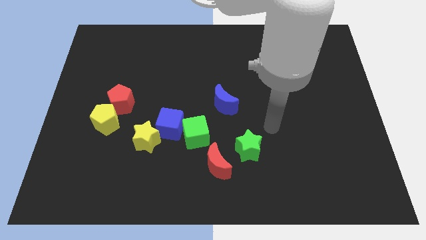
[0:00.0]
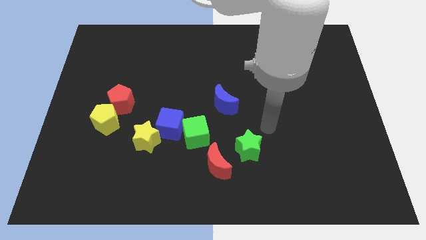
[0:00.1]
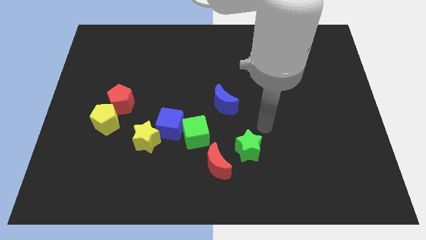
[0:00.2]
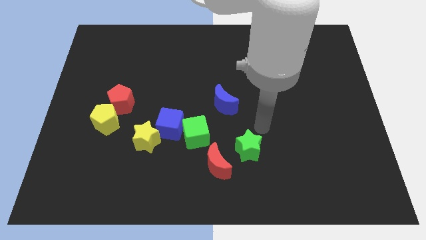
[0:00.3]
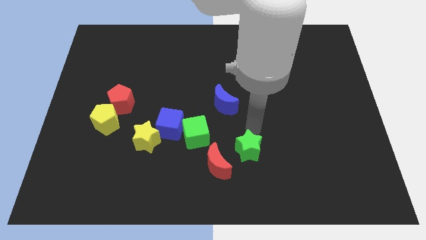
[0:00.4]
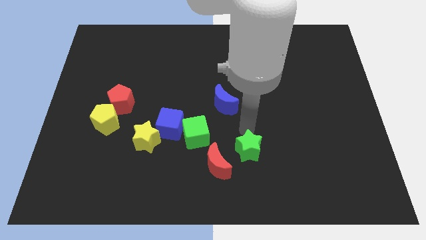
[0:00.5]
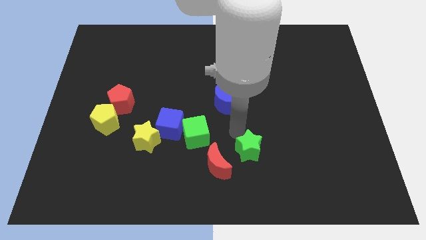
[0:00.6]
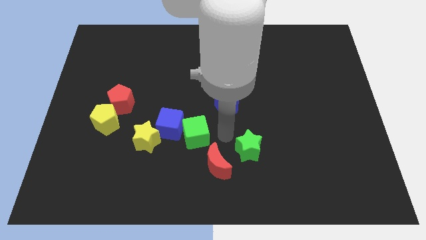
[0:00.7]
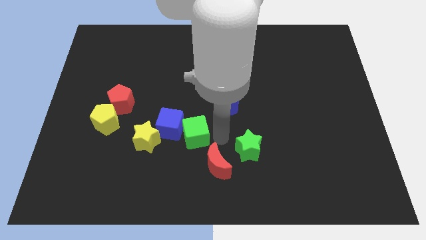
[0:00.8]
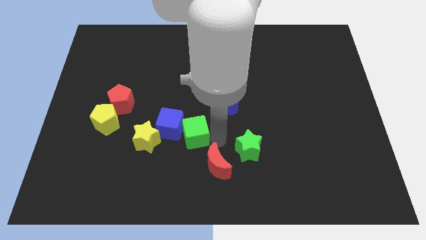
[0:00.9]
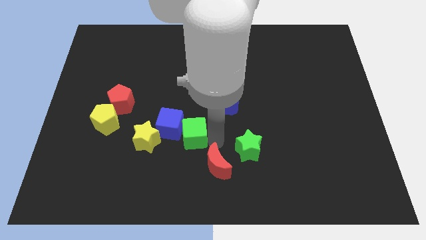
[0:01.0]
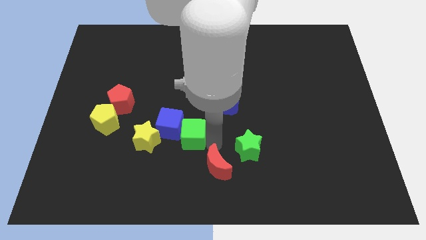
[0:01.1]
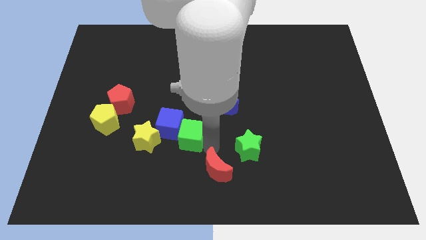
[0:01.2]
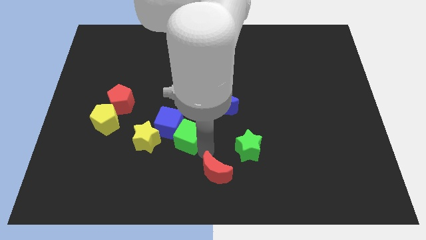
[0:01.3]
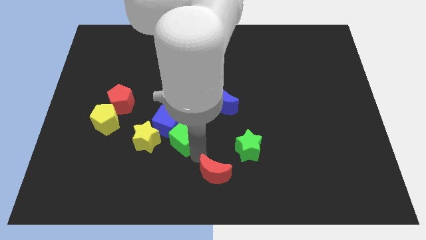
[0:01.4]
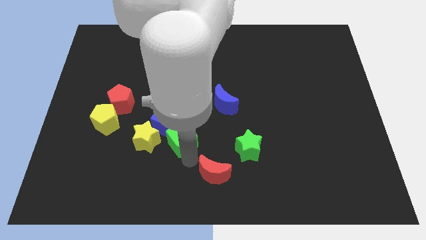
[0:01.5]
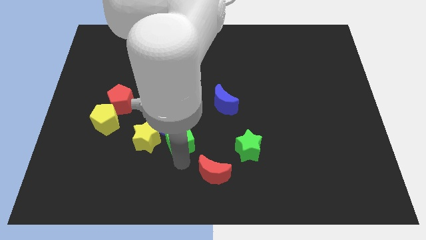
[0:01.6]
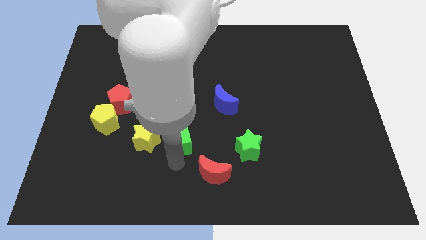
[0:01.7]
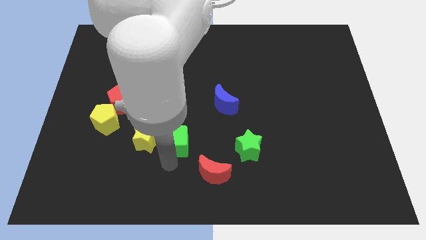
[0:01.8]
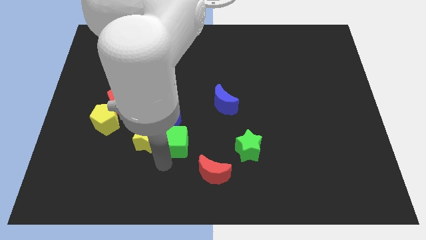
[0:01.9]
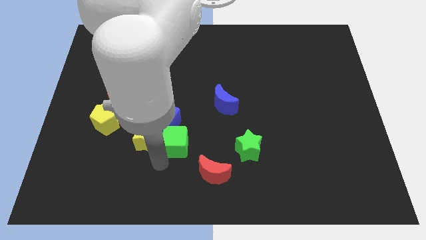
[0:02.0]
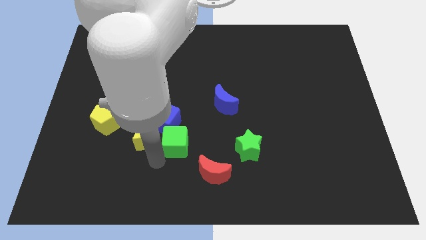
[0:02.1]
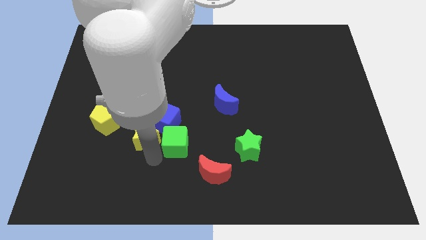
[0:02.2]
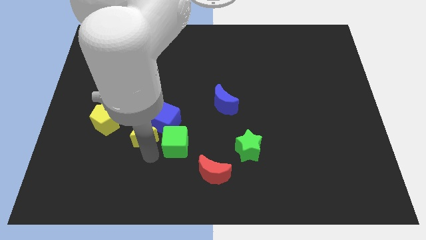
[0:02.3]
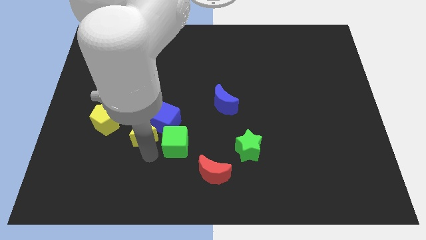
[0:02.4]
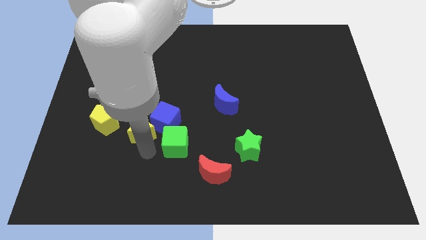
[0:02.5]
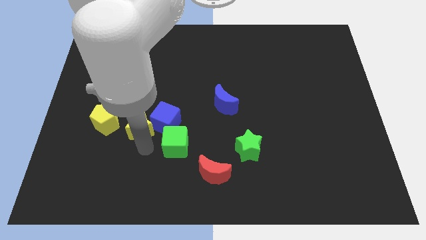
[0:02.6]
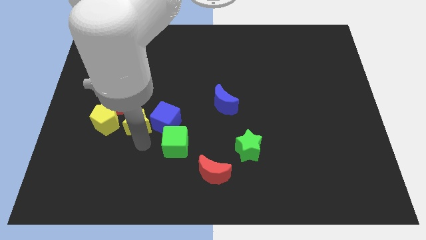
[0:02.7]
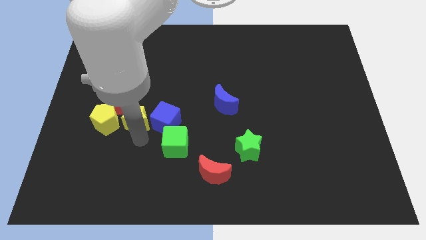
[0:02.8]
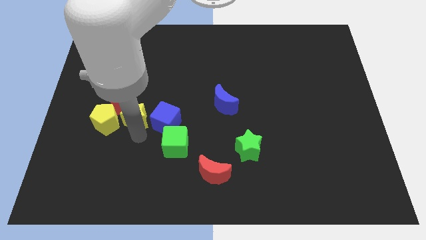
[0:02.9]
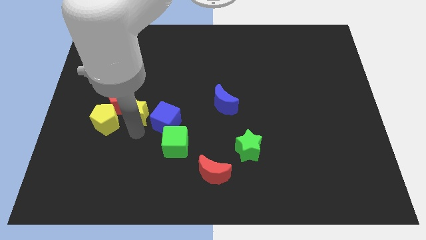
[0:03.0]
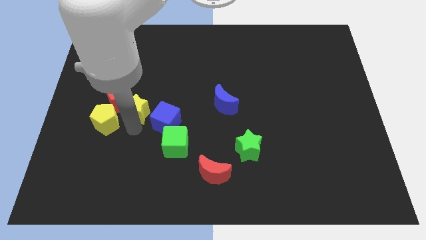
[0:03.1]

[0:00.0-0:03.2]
move the yellow star close to the red pentagon

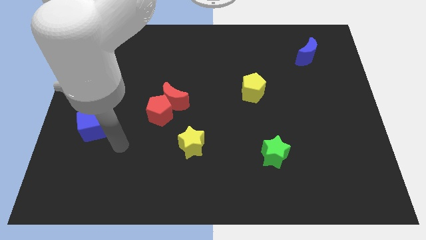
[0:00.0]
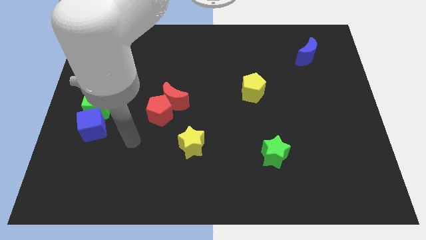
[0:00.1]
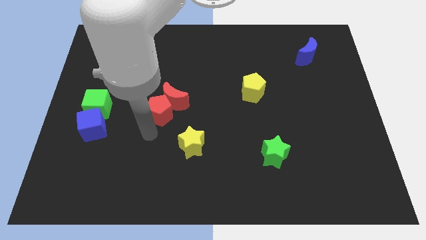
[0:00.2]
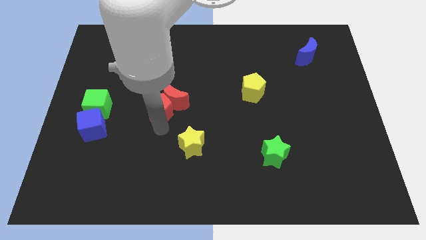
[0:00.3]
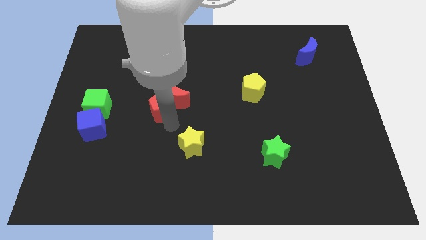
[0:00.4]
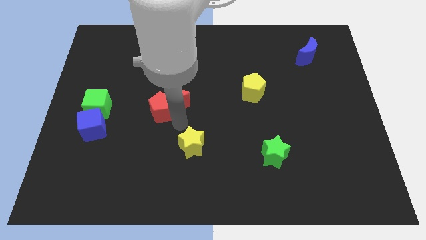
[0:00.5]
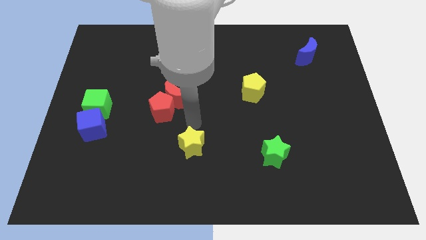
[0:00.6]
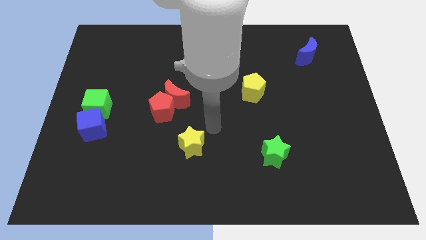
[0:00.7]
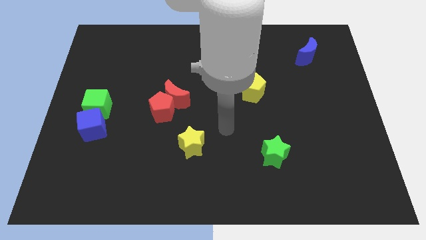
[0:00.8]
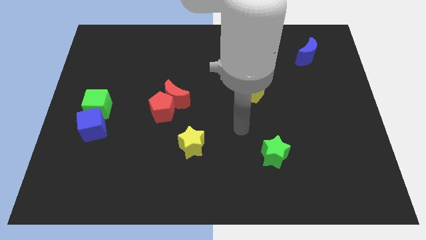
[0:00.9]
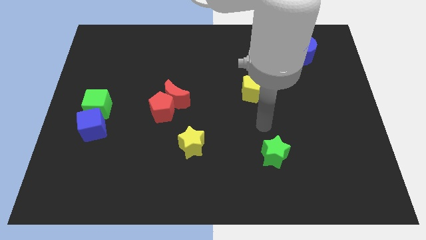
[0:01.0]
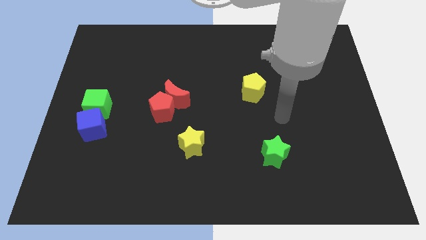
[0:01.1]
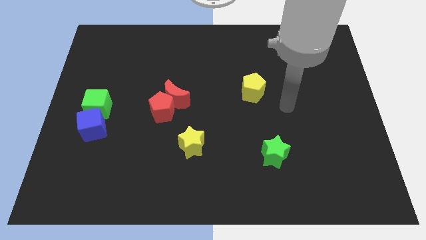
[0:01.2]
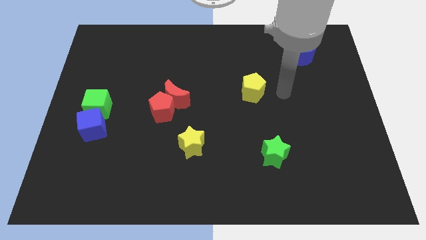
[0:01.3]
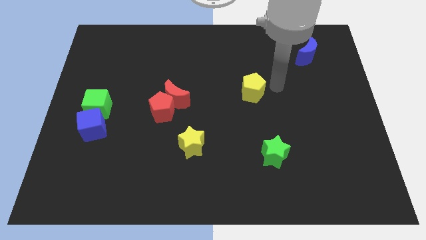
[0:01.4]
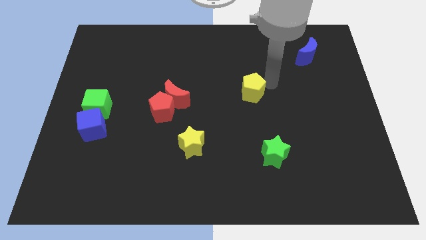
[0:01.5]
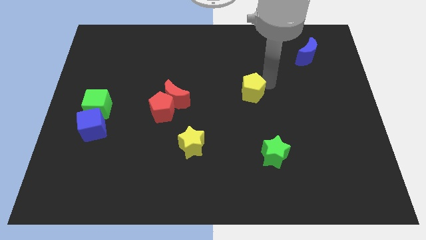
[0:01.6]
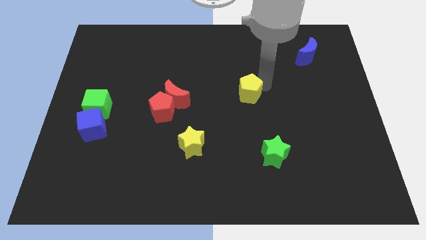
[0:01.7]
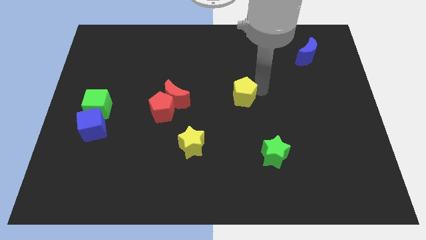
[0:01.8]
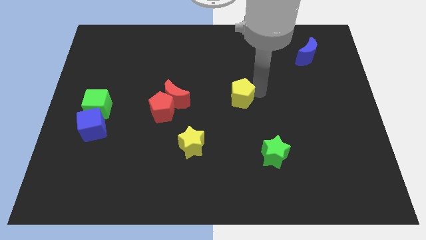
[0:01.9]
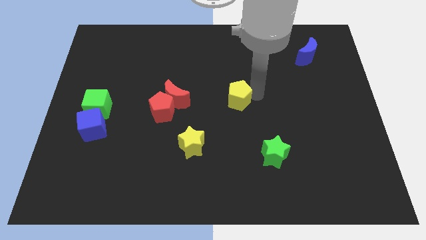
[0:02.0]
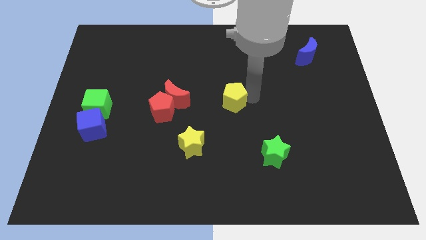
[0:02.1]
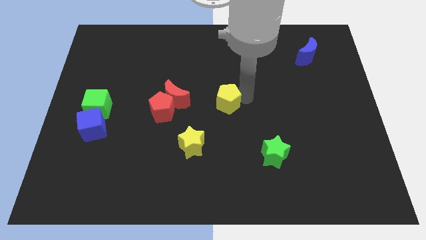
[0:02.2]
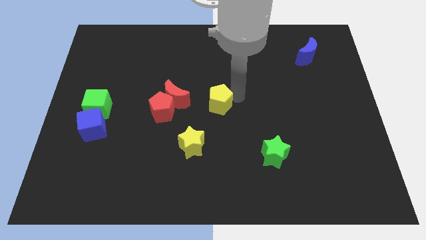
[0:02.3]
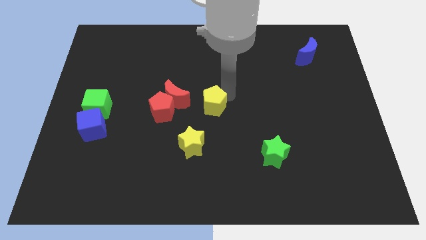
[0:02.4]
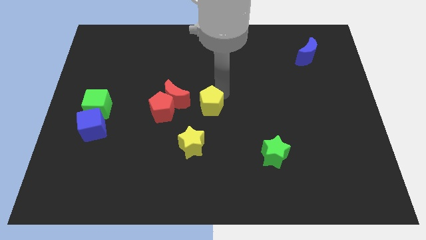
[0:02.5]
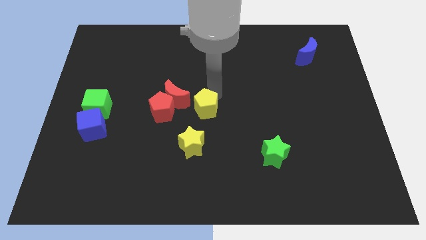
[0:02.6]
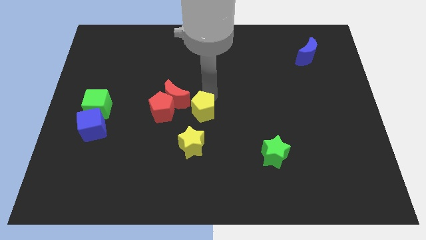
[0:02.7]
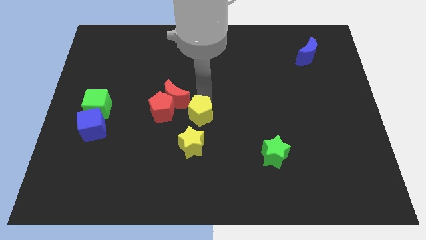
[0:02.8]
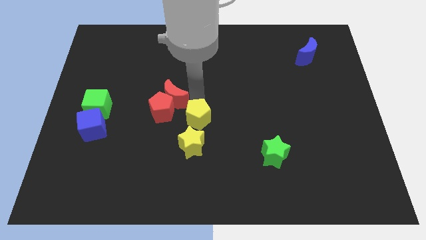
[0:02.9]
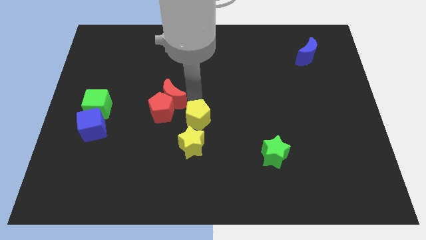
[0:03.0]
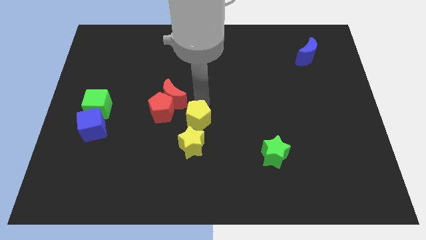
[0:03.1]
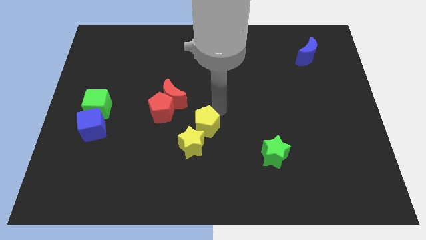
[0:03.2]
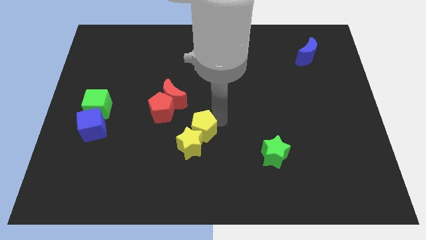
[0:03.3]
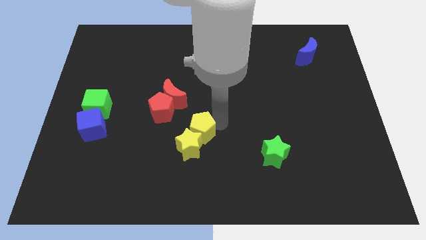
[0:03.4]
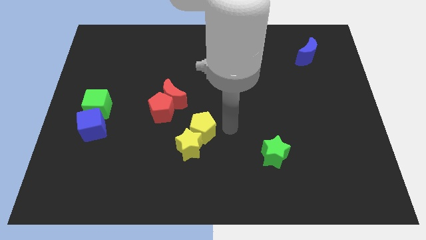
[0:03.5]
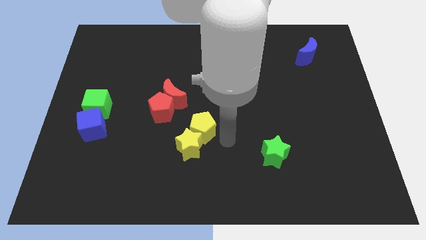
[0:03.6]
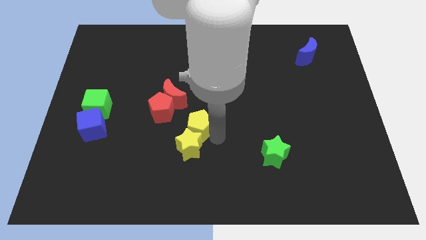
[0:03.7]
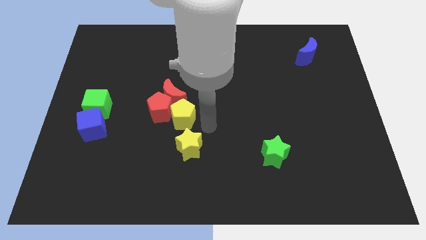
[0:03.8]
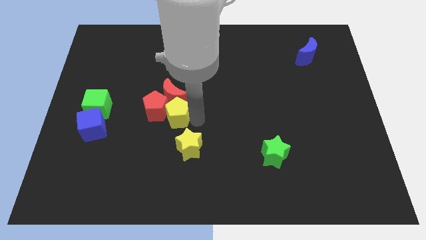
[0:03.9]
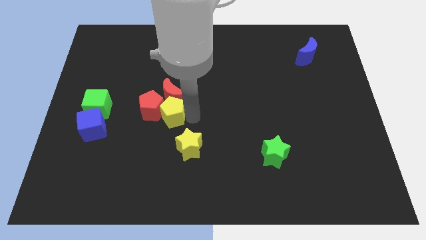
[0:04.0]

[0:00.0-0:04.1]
slide the yellow pentagon close to the red pentagon

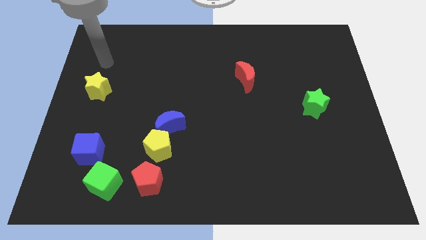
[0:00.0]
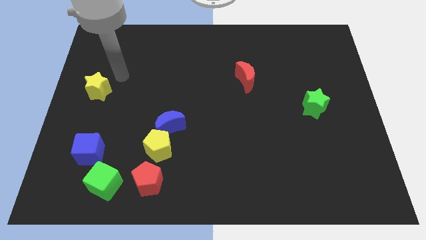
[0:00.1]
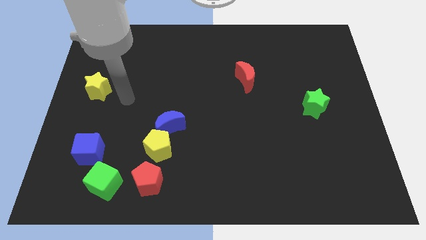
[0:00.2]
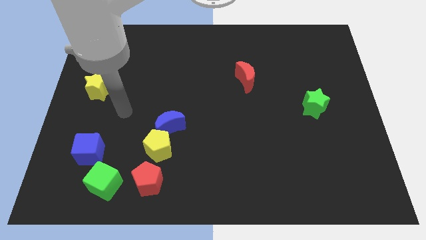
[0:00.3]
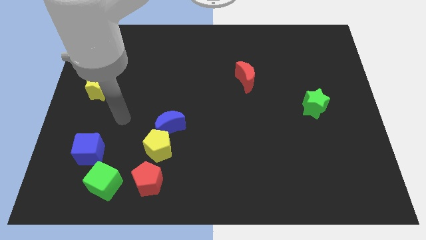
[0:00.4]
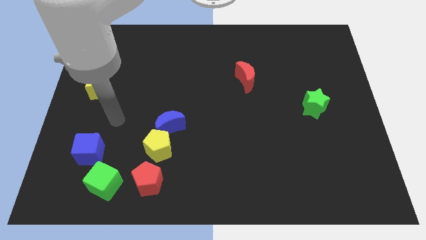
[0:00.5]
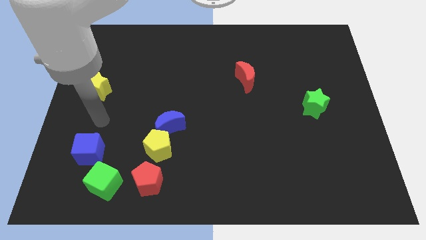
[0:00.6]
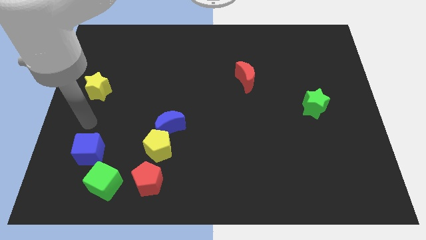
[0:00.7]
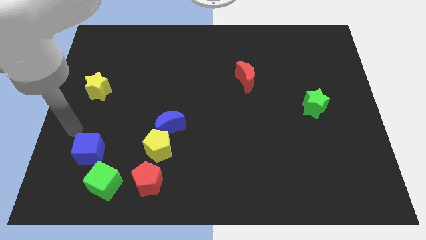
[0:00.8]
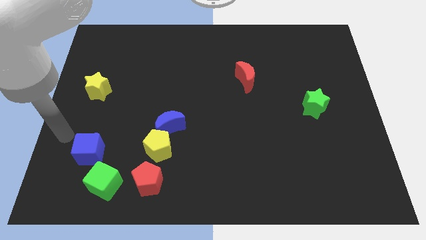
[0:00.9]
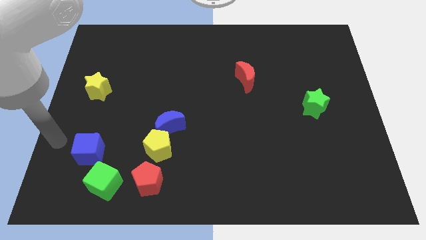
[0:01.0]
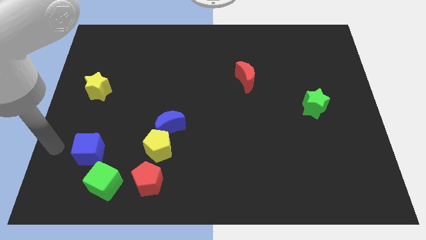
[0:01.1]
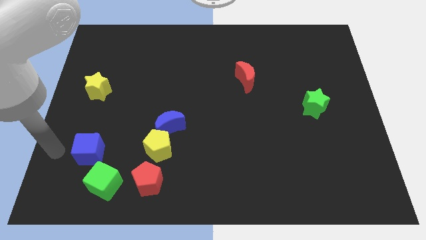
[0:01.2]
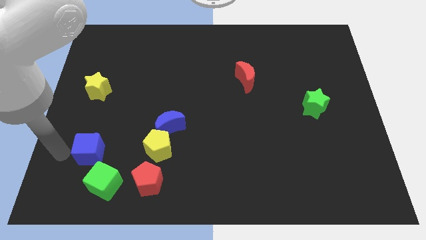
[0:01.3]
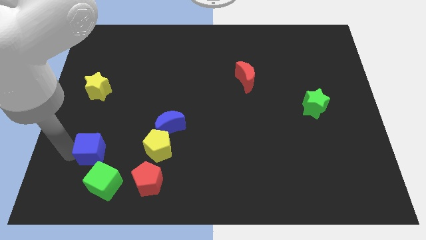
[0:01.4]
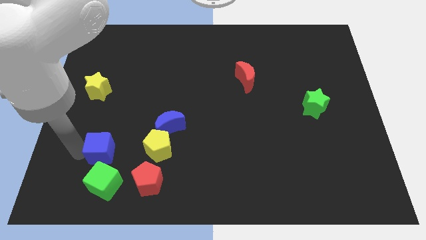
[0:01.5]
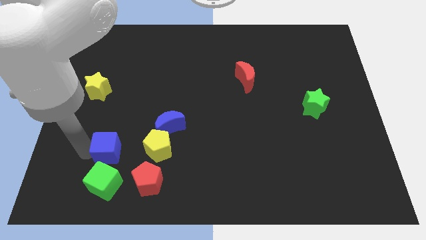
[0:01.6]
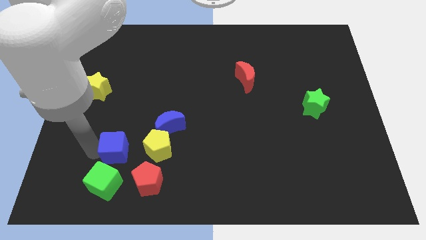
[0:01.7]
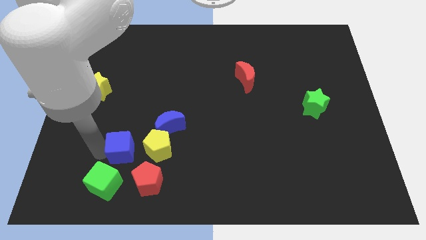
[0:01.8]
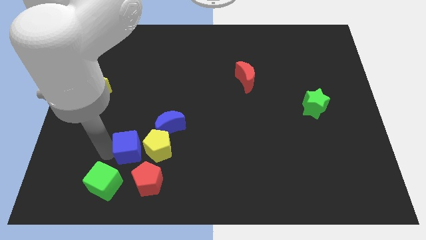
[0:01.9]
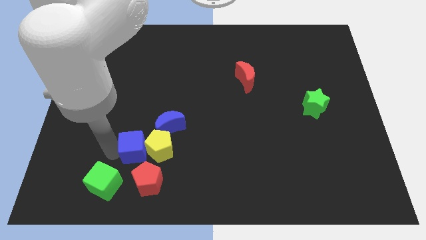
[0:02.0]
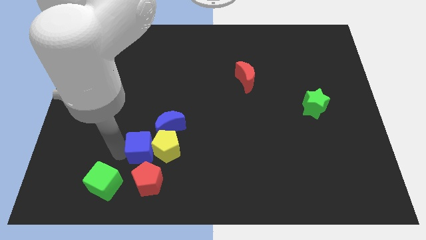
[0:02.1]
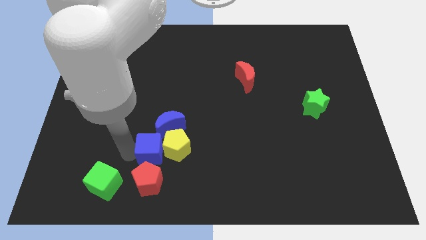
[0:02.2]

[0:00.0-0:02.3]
slide the blue cube close to the yellow pentagon
